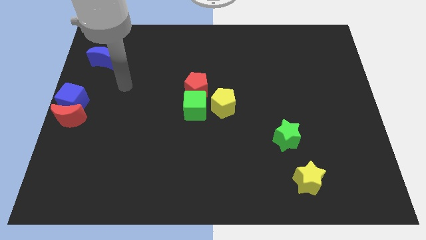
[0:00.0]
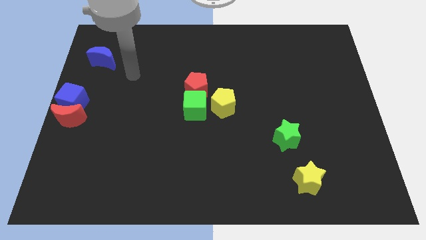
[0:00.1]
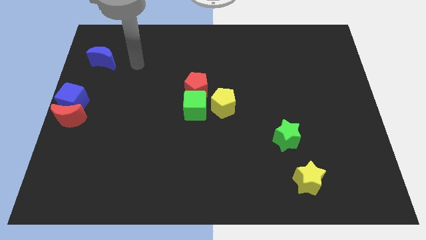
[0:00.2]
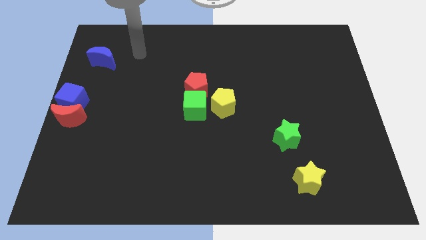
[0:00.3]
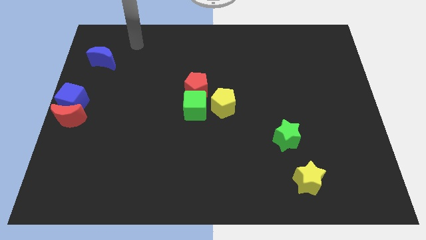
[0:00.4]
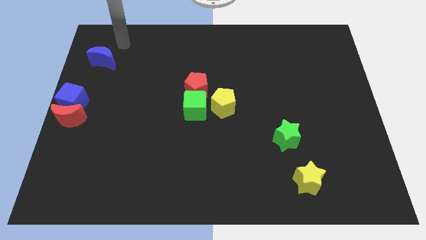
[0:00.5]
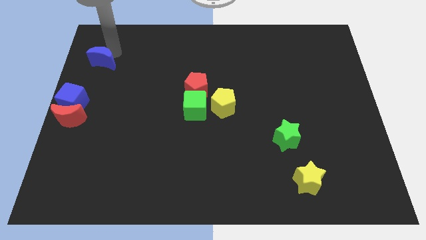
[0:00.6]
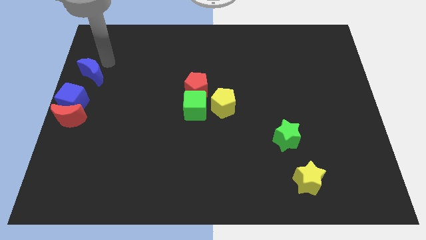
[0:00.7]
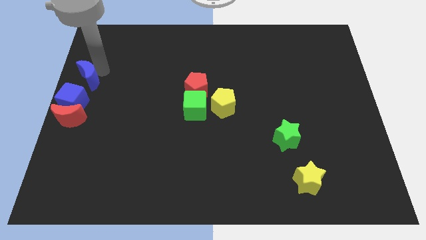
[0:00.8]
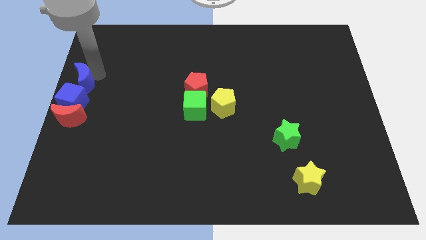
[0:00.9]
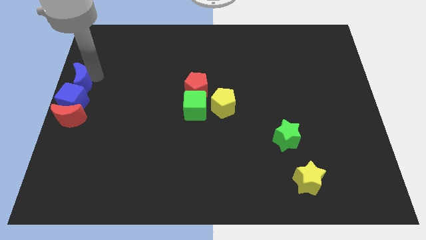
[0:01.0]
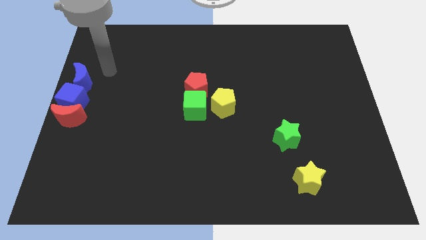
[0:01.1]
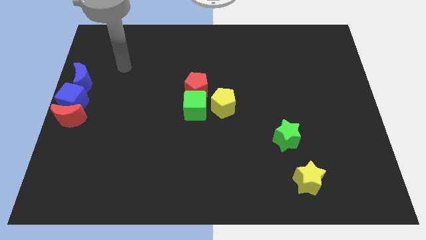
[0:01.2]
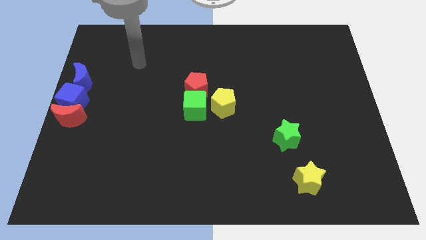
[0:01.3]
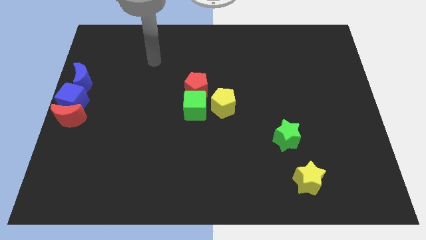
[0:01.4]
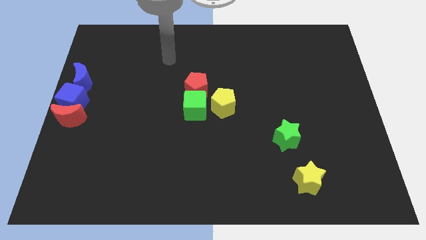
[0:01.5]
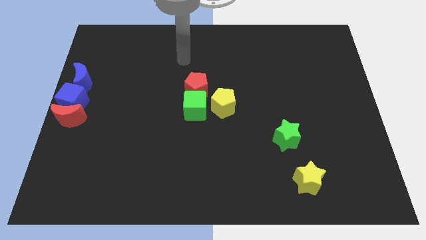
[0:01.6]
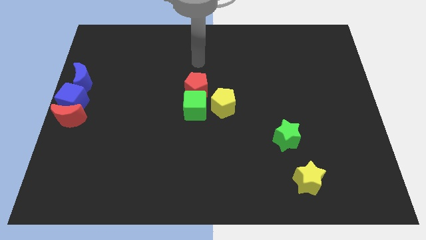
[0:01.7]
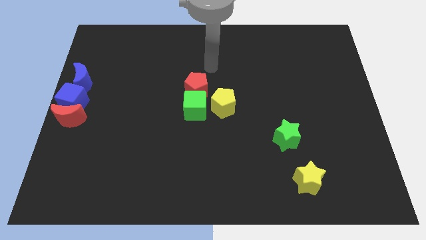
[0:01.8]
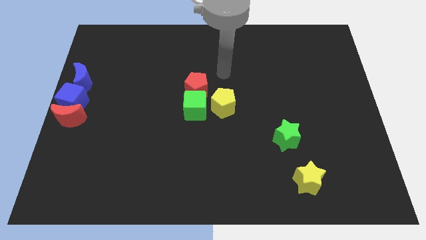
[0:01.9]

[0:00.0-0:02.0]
place the blue moon above the blue cube

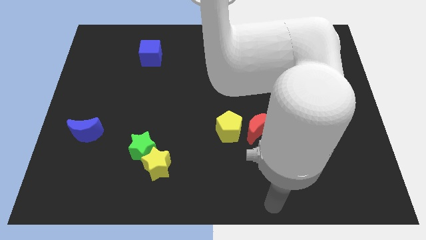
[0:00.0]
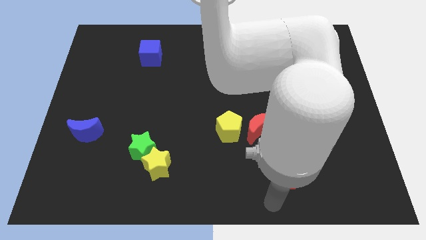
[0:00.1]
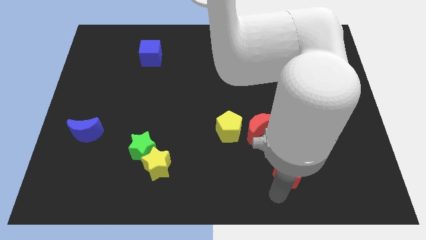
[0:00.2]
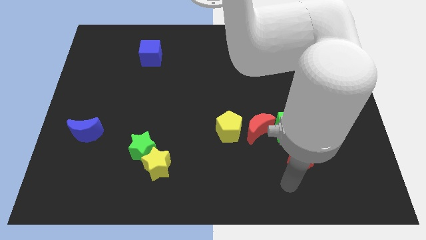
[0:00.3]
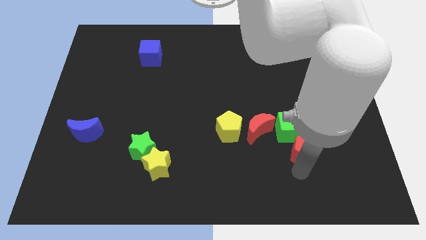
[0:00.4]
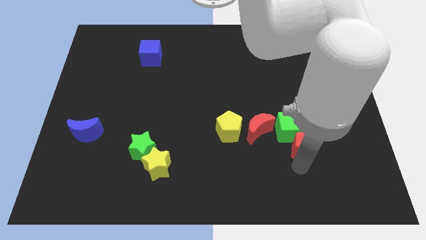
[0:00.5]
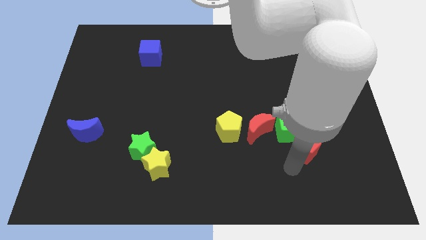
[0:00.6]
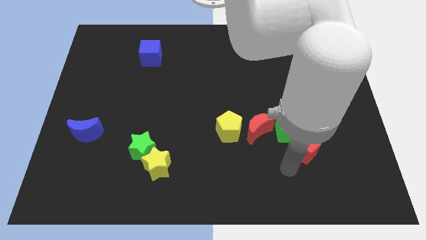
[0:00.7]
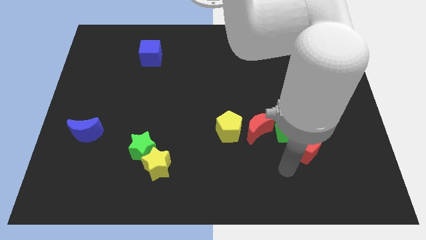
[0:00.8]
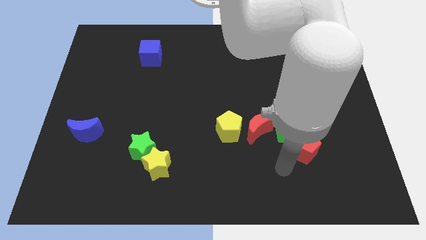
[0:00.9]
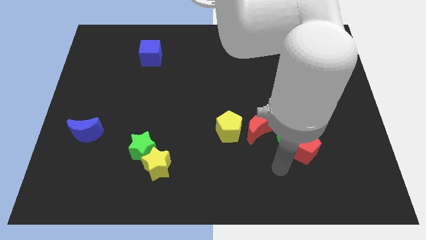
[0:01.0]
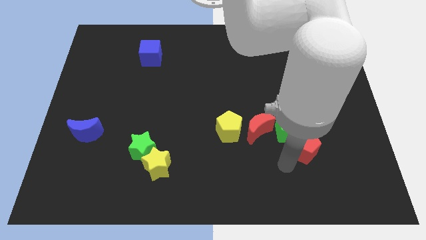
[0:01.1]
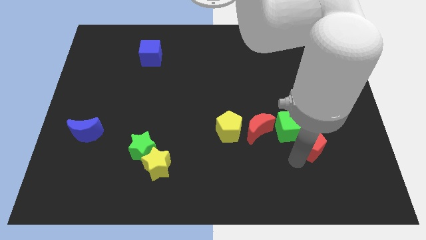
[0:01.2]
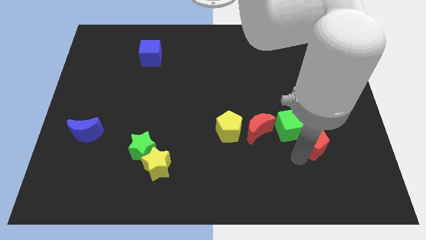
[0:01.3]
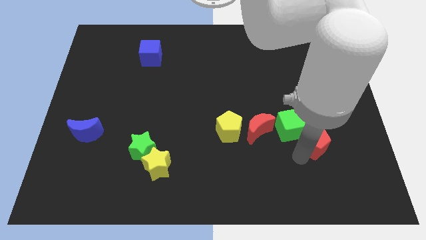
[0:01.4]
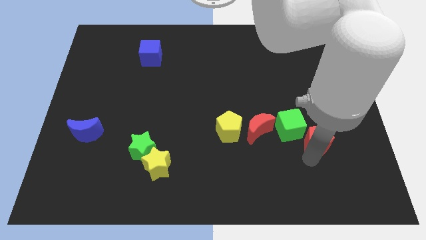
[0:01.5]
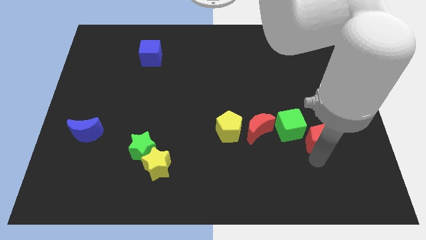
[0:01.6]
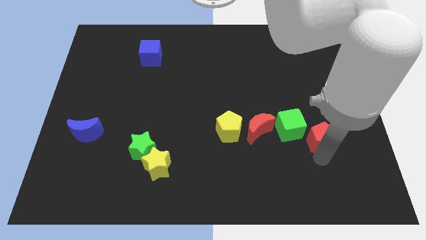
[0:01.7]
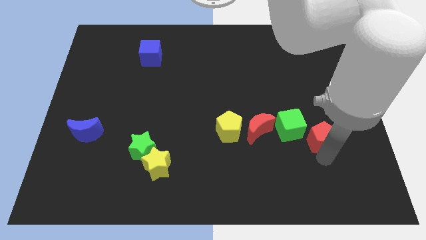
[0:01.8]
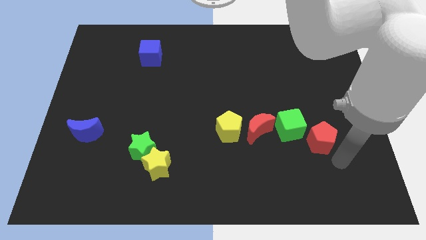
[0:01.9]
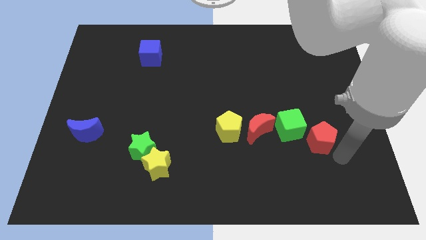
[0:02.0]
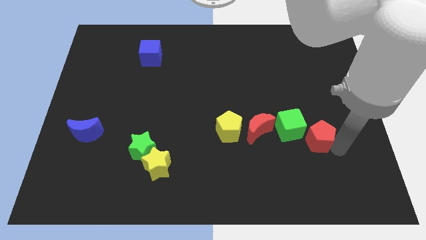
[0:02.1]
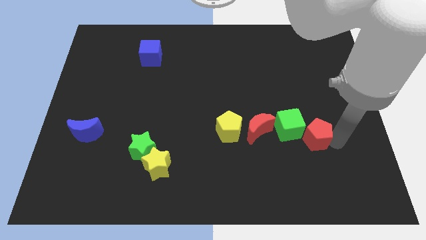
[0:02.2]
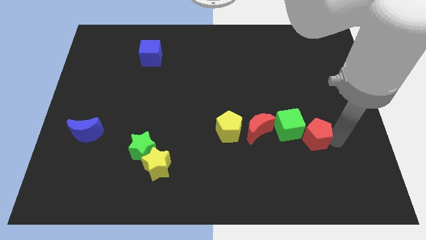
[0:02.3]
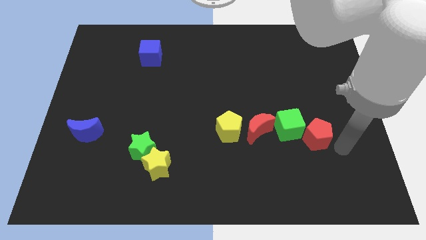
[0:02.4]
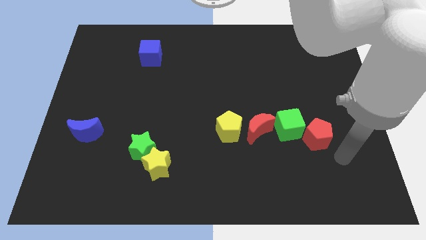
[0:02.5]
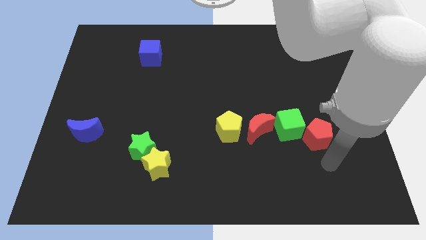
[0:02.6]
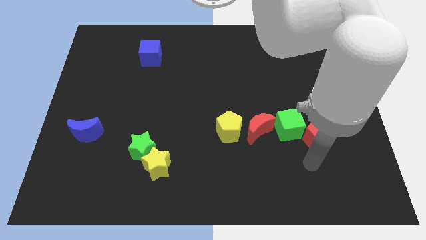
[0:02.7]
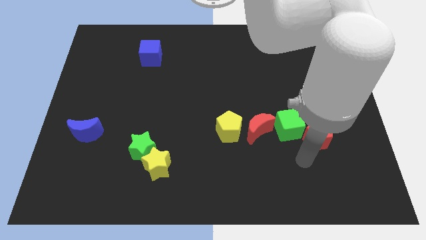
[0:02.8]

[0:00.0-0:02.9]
push the red pentagon into the green cube

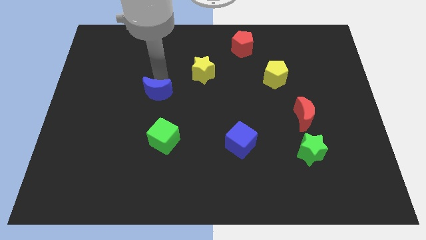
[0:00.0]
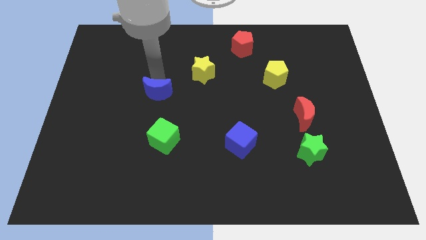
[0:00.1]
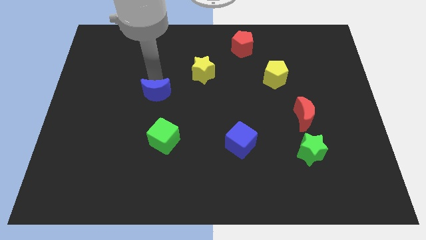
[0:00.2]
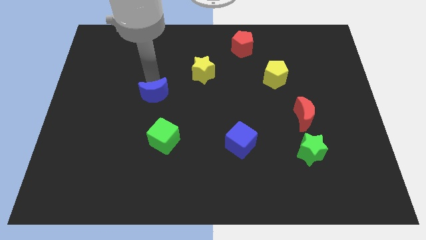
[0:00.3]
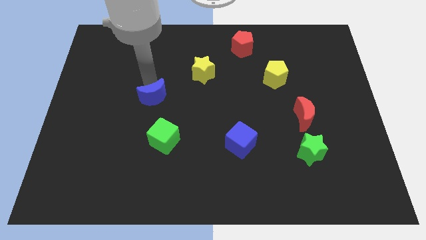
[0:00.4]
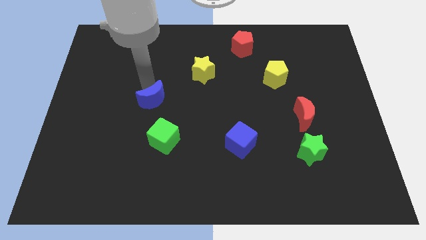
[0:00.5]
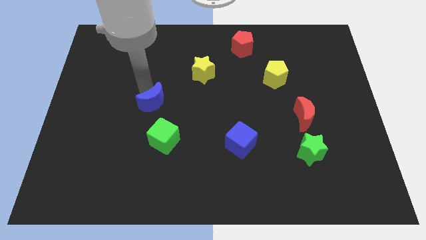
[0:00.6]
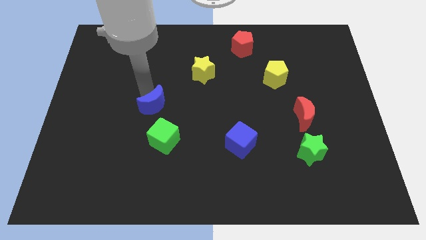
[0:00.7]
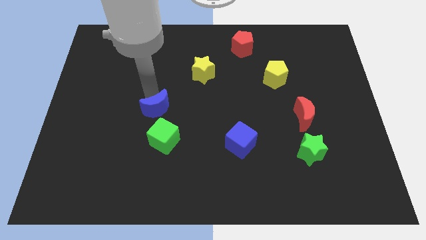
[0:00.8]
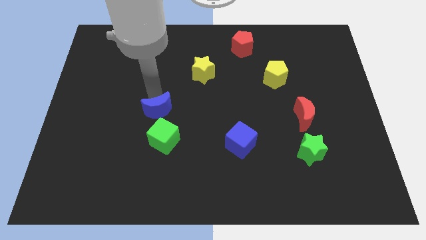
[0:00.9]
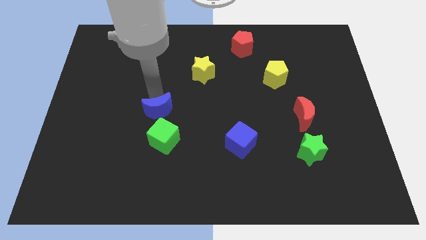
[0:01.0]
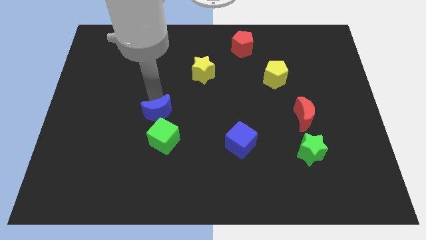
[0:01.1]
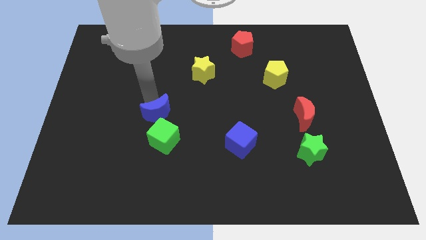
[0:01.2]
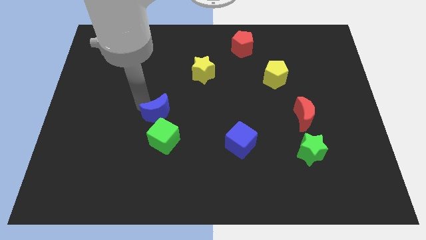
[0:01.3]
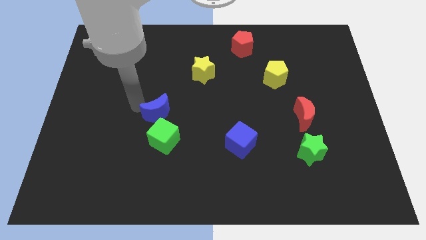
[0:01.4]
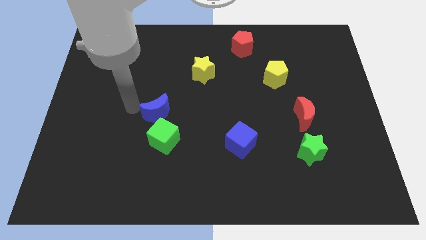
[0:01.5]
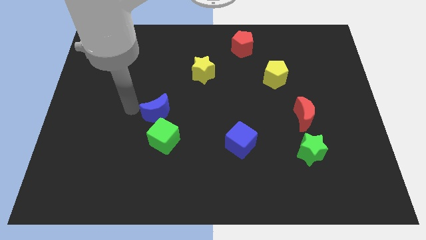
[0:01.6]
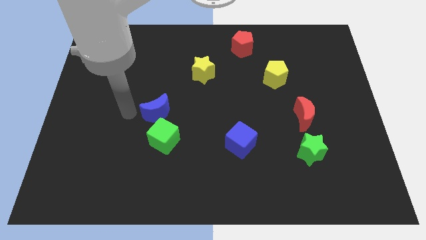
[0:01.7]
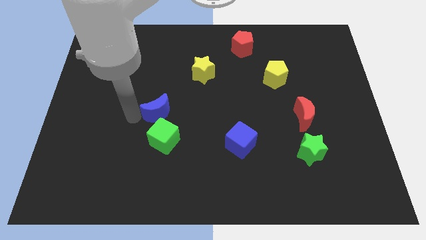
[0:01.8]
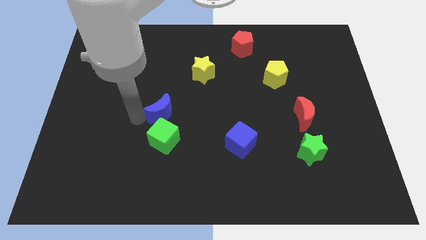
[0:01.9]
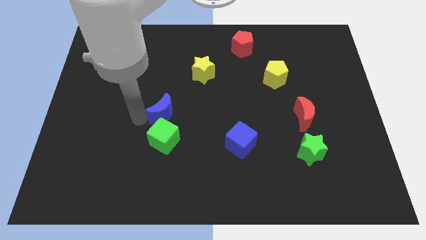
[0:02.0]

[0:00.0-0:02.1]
place blue moon above the green cube

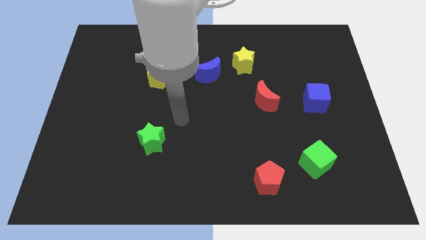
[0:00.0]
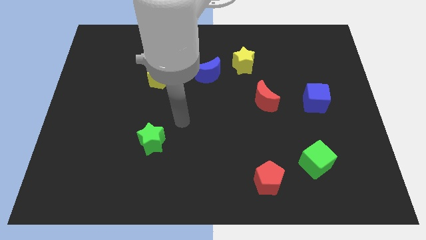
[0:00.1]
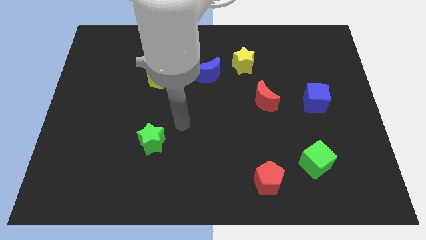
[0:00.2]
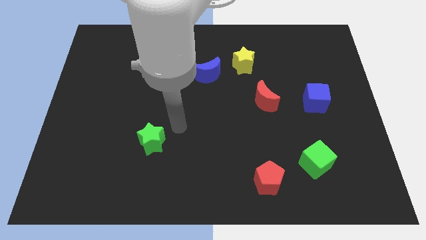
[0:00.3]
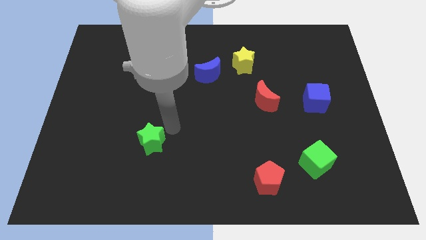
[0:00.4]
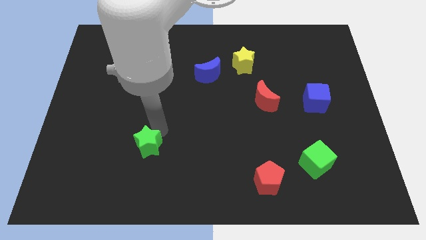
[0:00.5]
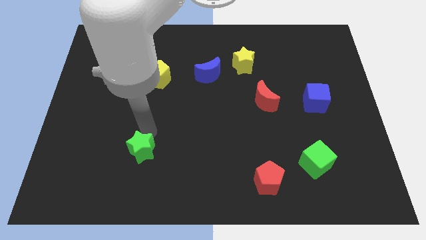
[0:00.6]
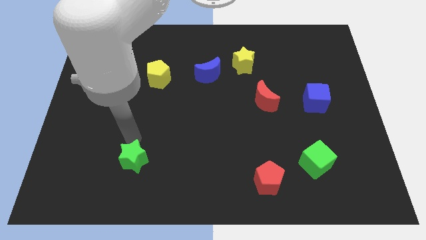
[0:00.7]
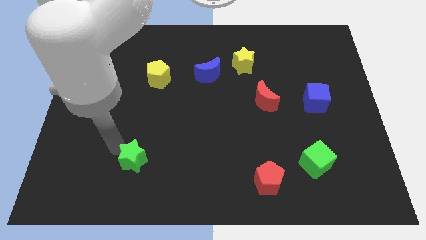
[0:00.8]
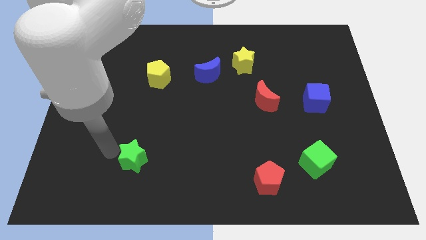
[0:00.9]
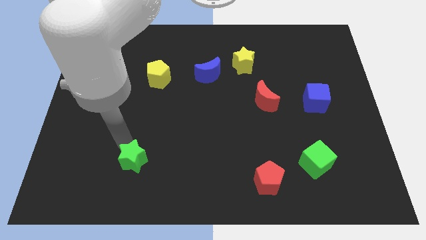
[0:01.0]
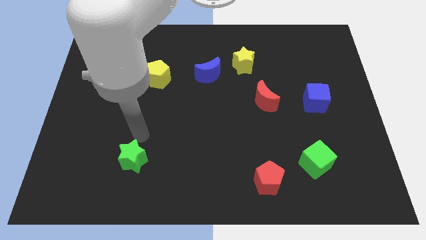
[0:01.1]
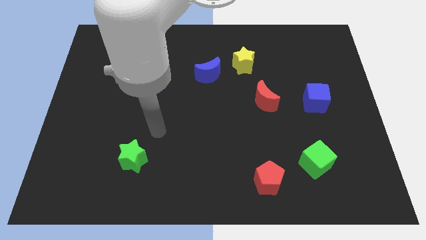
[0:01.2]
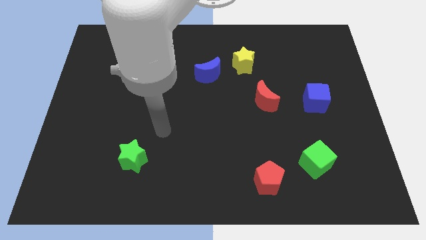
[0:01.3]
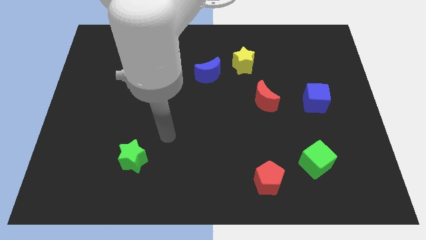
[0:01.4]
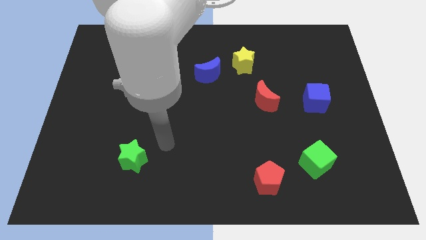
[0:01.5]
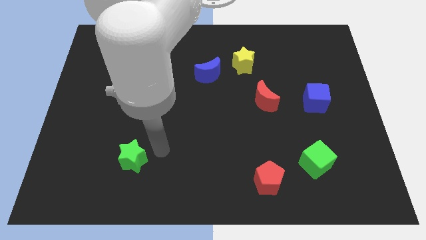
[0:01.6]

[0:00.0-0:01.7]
slightly push the green star diagonally down

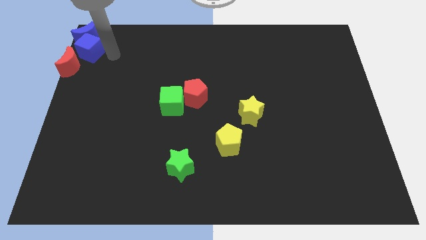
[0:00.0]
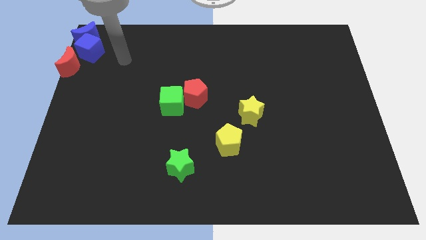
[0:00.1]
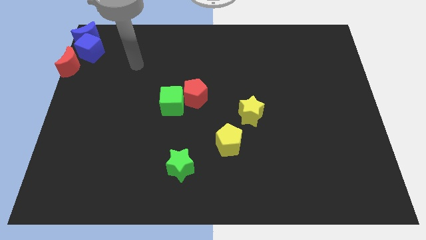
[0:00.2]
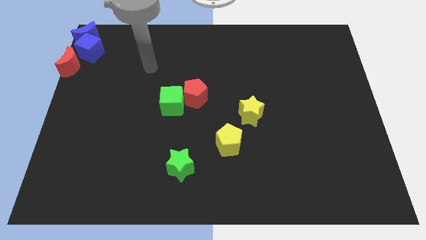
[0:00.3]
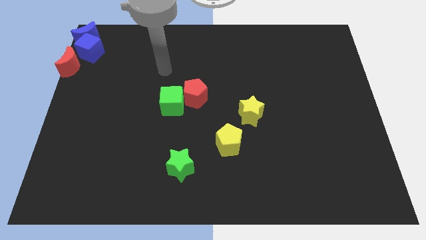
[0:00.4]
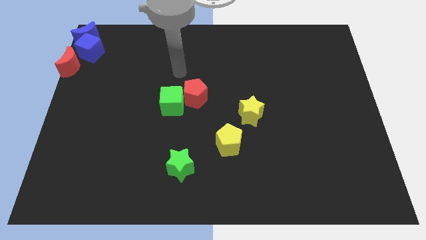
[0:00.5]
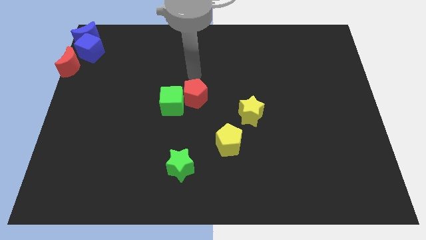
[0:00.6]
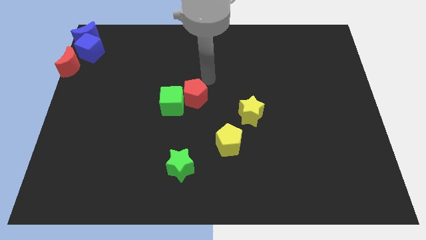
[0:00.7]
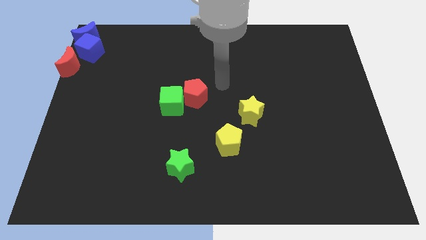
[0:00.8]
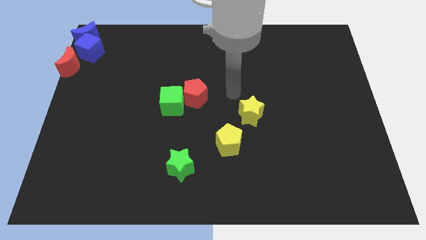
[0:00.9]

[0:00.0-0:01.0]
move your arm towards the yellow star
